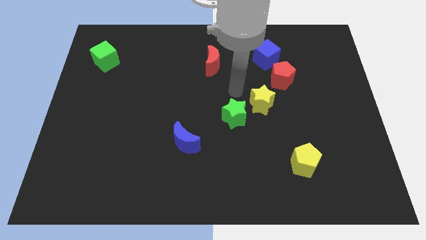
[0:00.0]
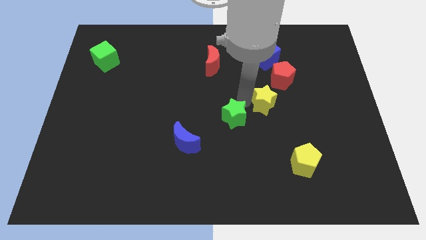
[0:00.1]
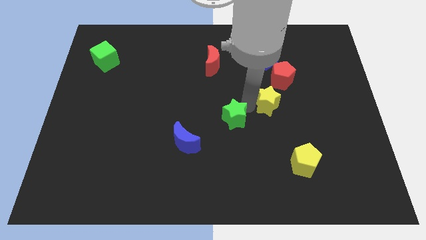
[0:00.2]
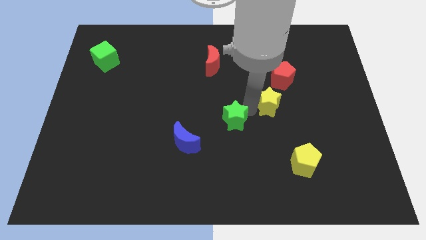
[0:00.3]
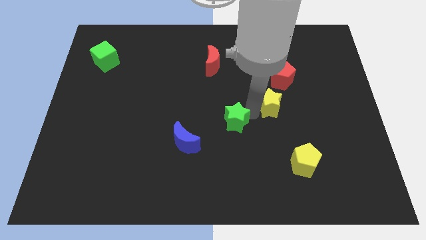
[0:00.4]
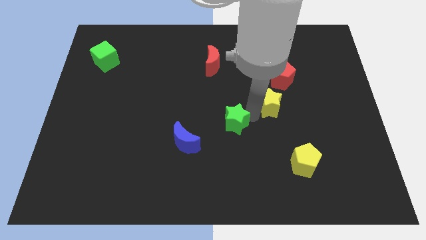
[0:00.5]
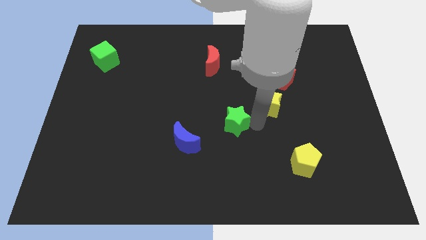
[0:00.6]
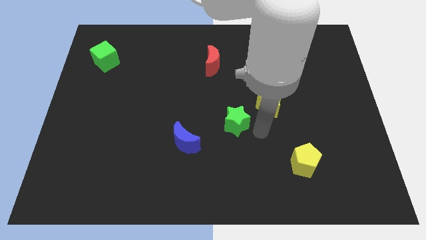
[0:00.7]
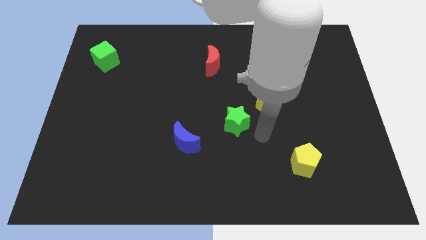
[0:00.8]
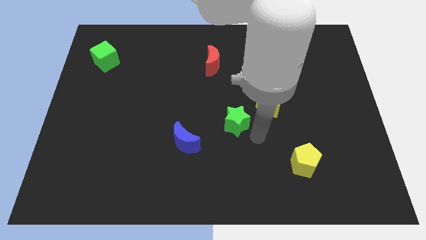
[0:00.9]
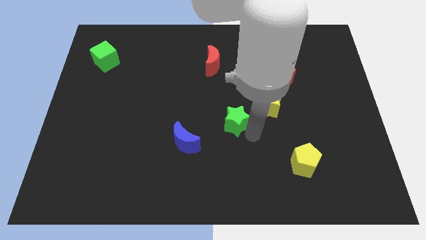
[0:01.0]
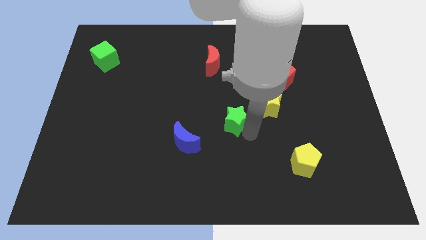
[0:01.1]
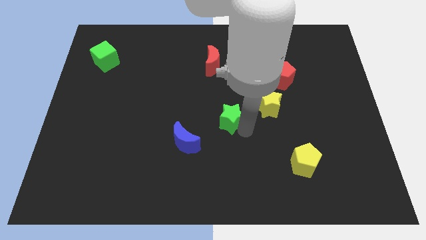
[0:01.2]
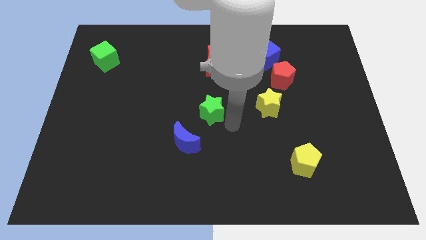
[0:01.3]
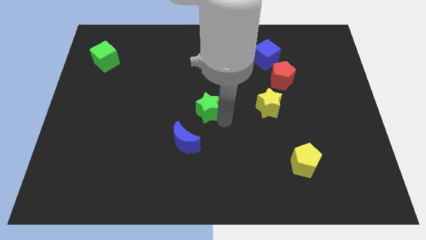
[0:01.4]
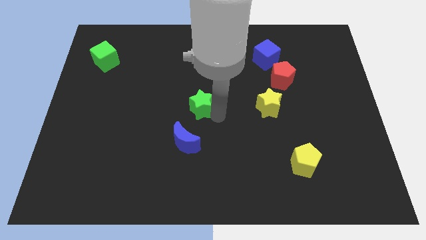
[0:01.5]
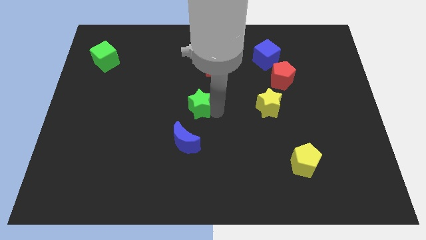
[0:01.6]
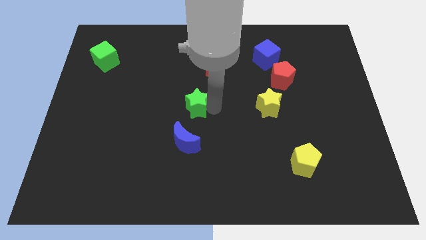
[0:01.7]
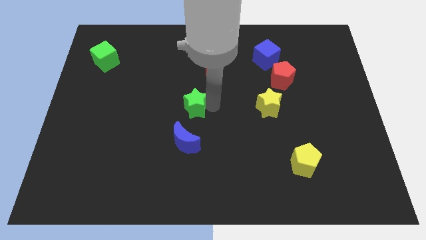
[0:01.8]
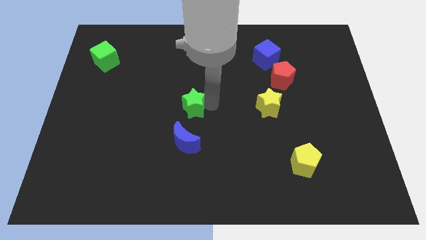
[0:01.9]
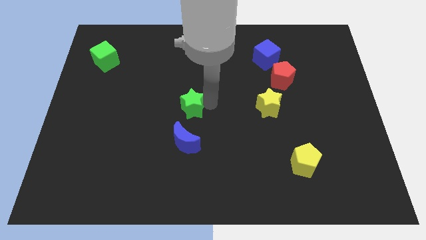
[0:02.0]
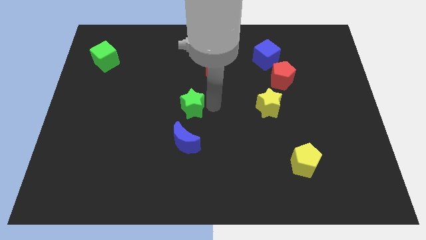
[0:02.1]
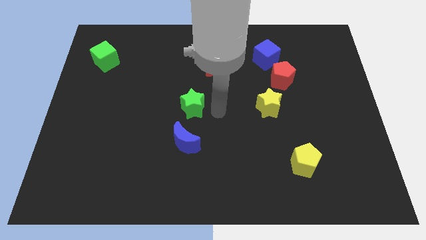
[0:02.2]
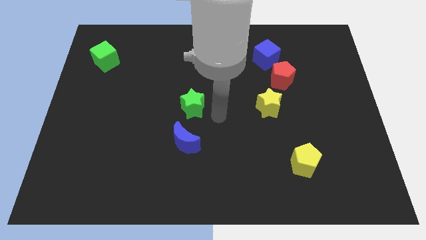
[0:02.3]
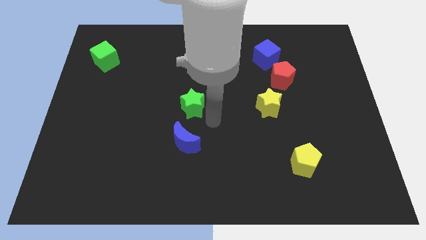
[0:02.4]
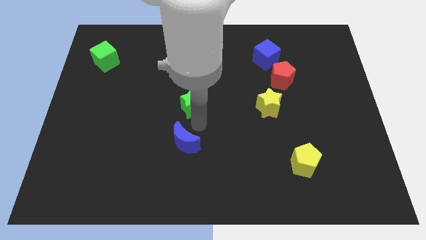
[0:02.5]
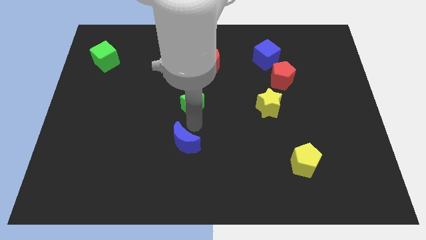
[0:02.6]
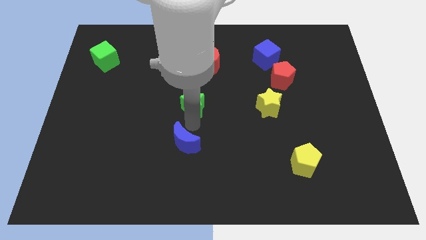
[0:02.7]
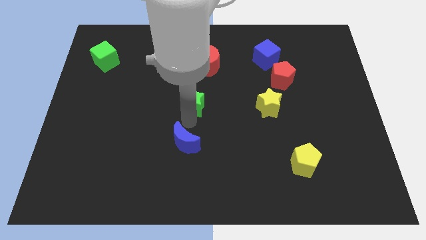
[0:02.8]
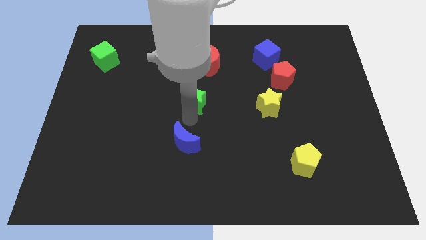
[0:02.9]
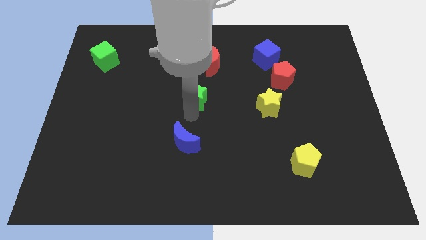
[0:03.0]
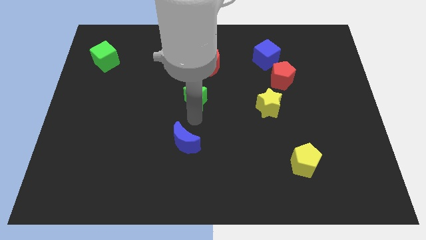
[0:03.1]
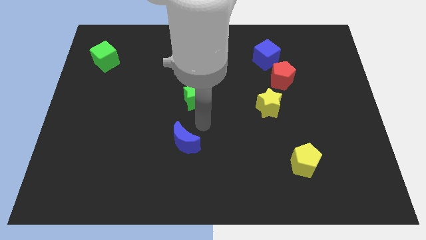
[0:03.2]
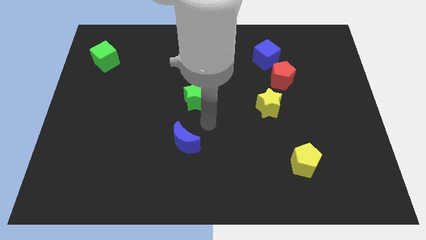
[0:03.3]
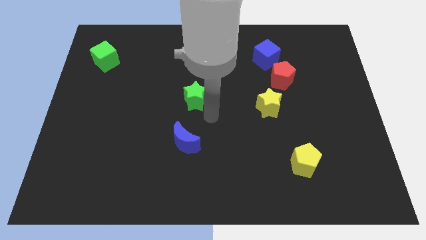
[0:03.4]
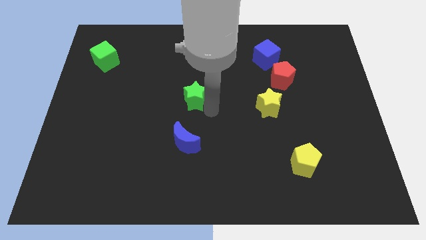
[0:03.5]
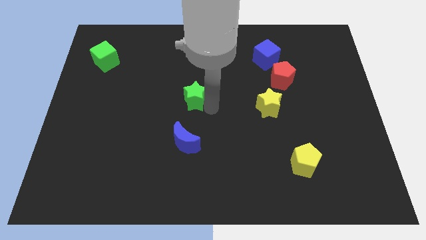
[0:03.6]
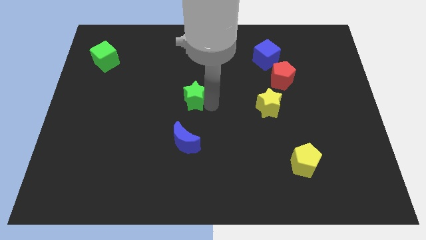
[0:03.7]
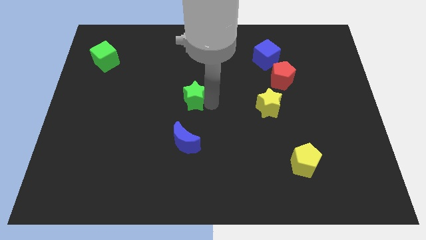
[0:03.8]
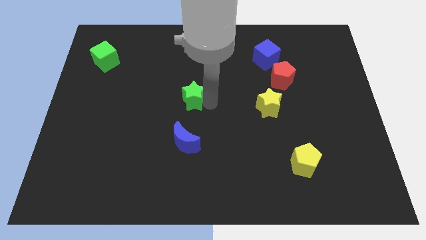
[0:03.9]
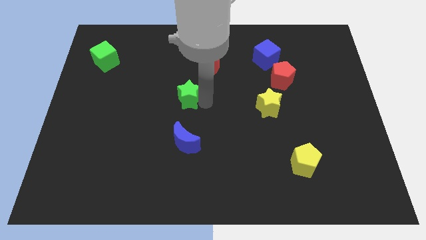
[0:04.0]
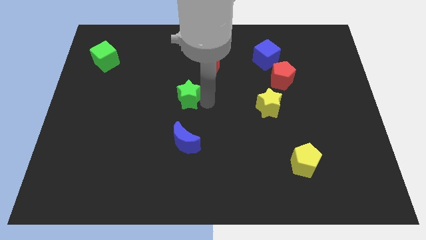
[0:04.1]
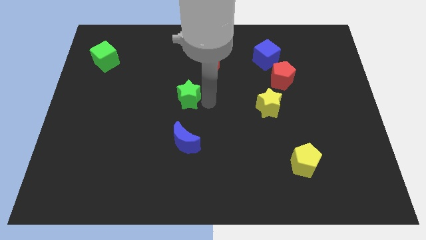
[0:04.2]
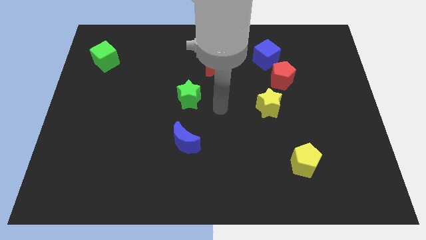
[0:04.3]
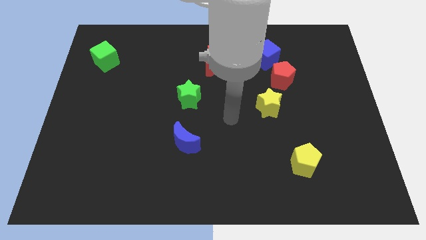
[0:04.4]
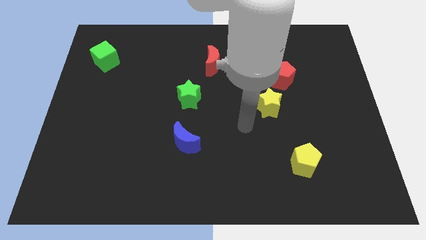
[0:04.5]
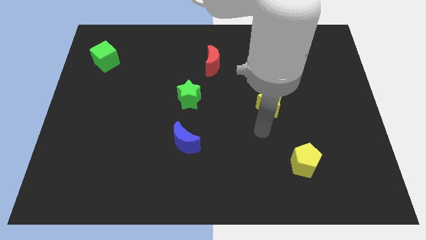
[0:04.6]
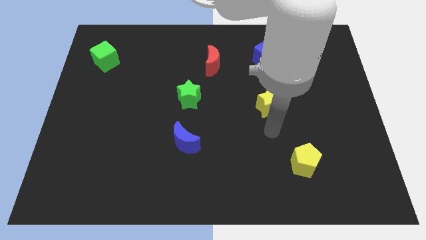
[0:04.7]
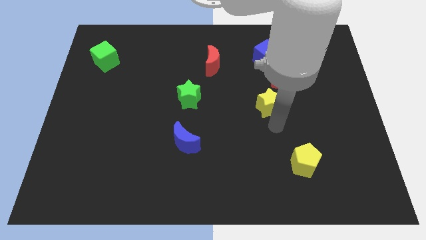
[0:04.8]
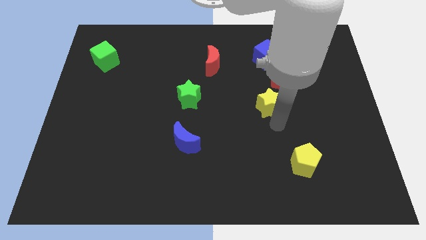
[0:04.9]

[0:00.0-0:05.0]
place the green star left to the yellow star

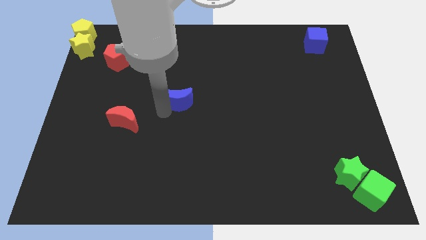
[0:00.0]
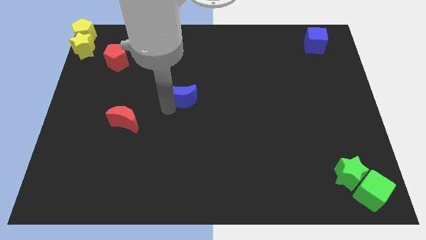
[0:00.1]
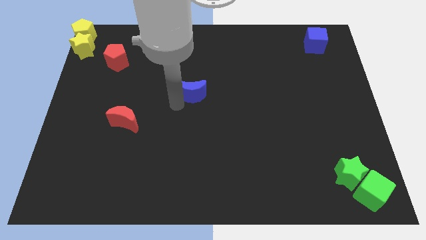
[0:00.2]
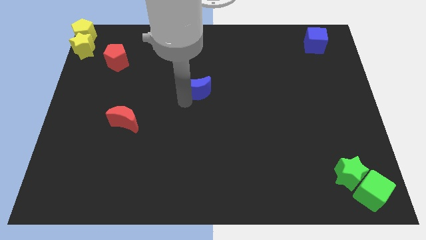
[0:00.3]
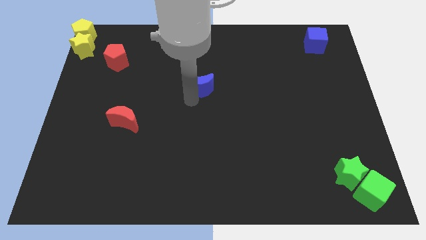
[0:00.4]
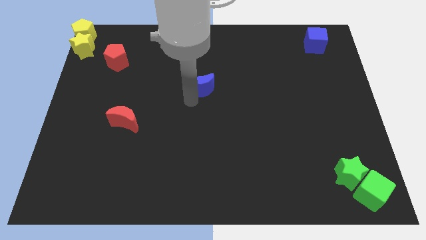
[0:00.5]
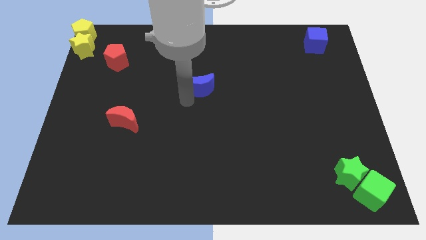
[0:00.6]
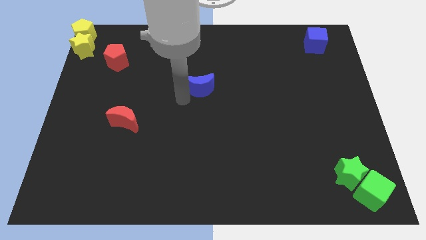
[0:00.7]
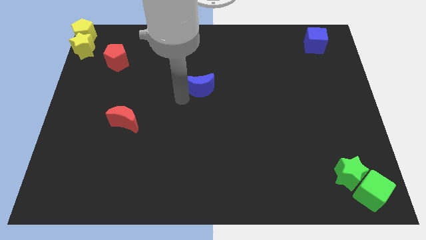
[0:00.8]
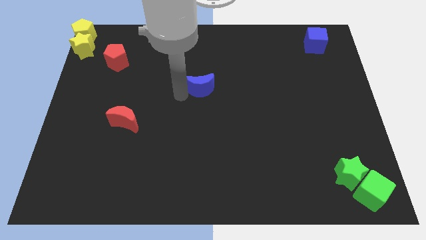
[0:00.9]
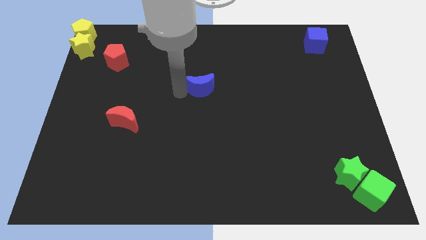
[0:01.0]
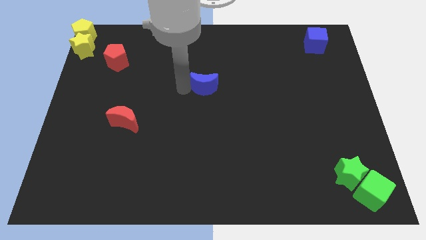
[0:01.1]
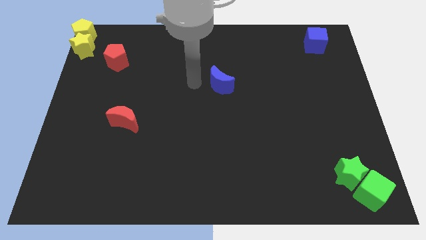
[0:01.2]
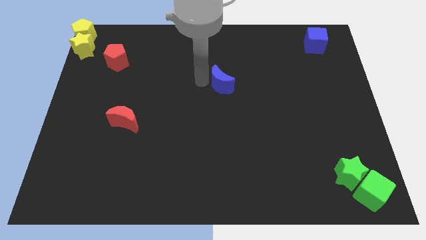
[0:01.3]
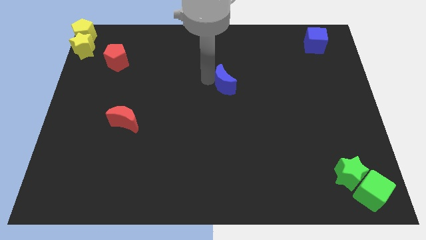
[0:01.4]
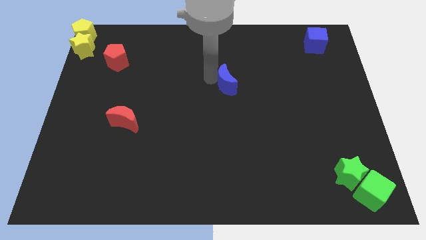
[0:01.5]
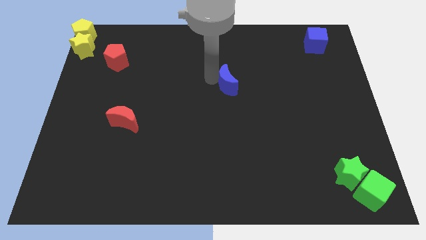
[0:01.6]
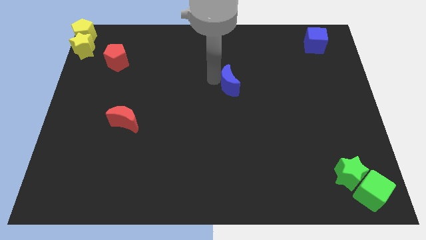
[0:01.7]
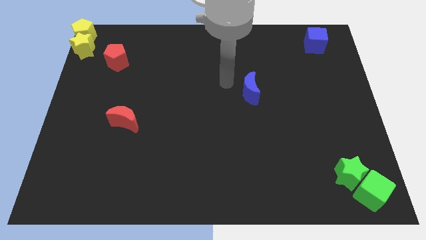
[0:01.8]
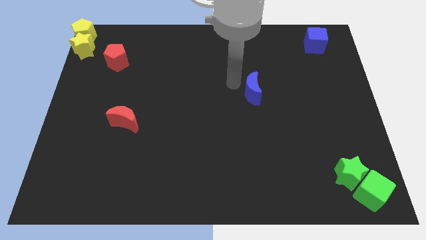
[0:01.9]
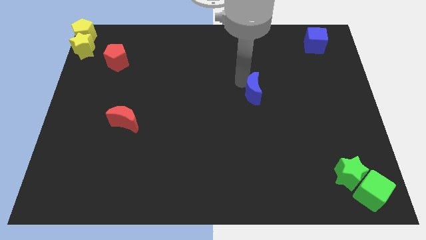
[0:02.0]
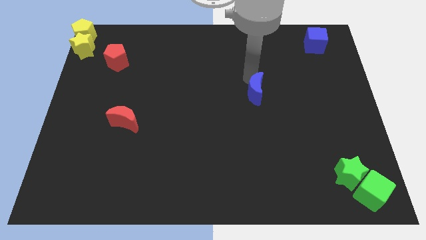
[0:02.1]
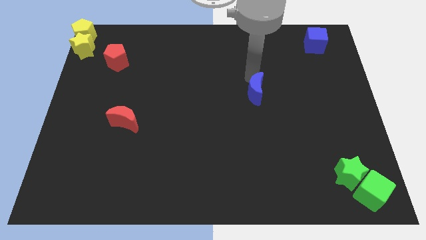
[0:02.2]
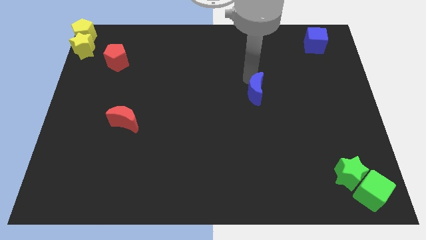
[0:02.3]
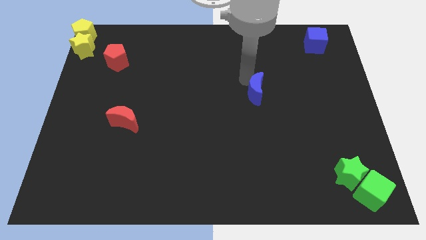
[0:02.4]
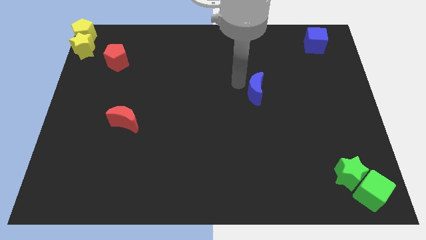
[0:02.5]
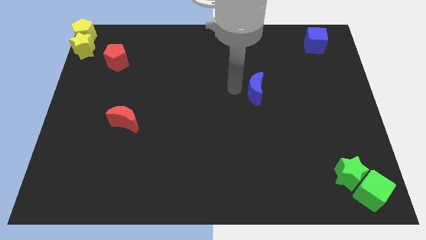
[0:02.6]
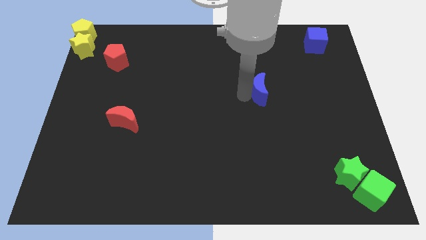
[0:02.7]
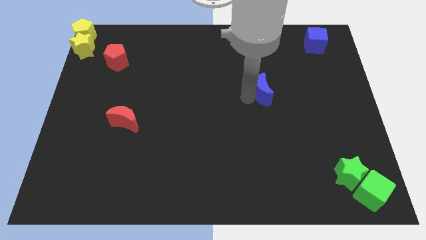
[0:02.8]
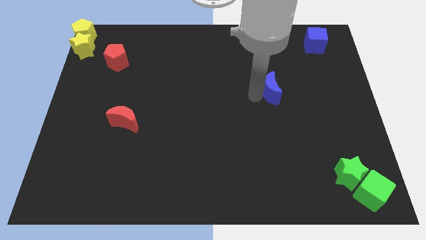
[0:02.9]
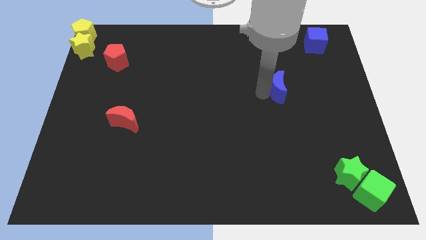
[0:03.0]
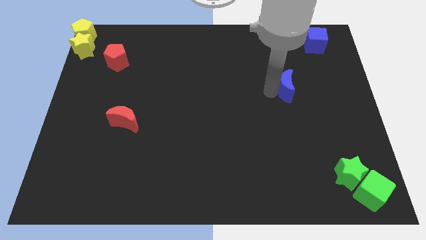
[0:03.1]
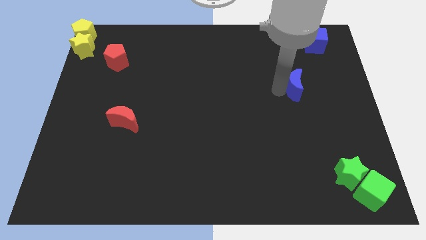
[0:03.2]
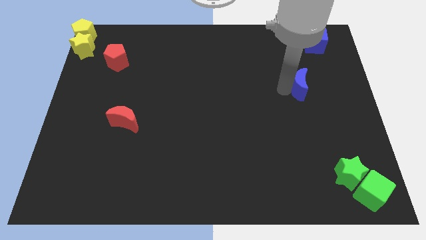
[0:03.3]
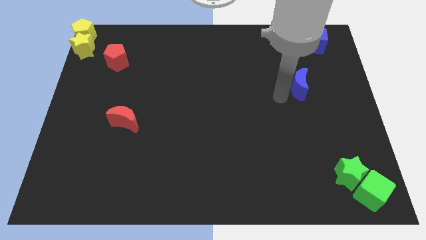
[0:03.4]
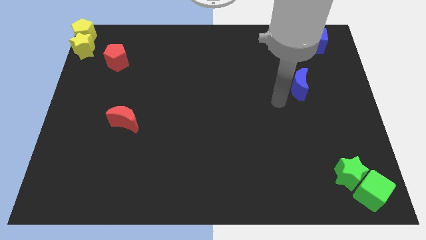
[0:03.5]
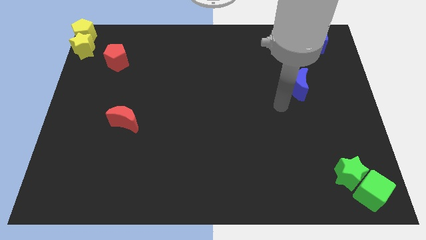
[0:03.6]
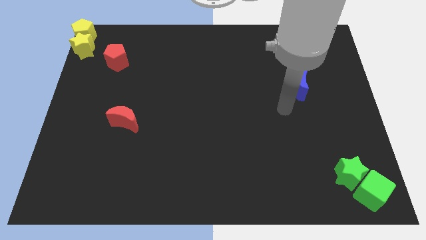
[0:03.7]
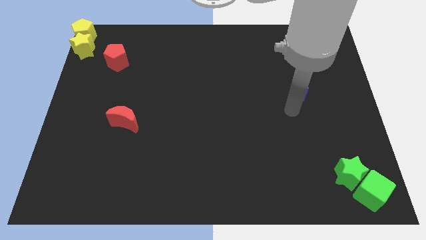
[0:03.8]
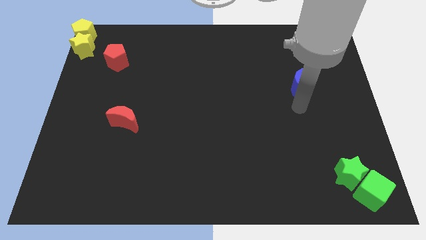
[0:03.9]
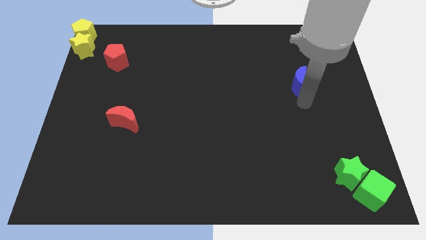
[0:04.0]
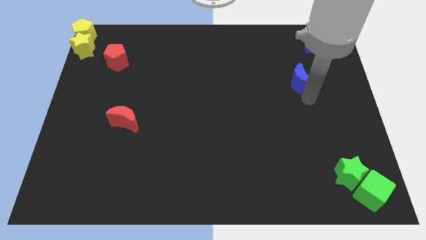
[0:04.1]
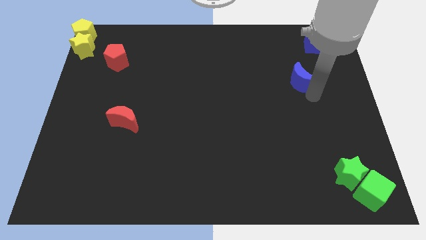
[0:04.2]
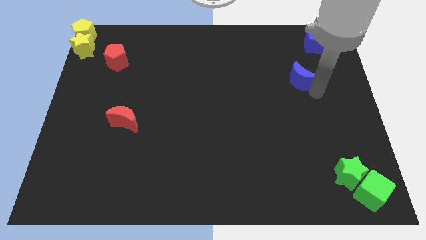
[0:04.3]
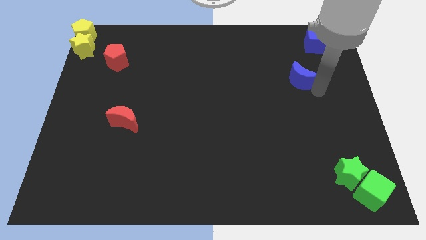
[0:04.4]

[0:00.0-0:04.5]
move the blue crescent towards the blue cube
